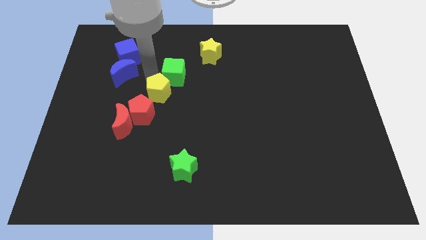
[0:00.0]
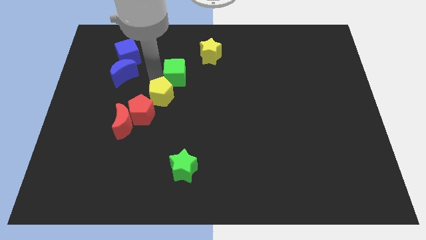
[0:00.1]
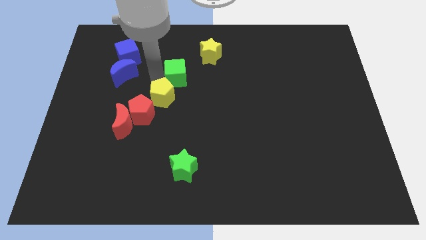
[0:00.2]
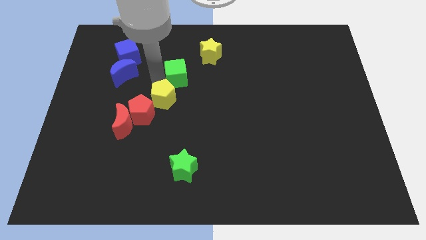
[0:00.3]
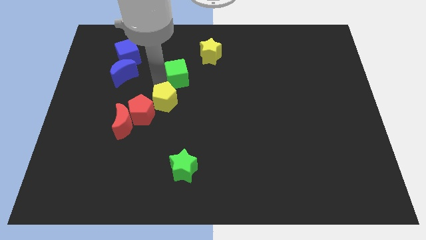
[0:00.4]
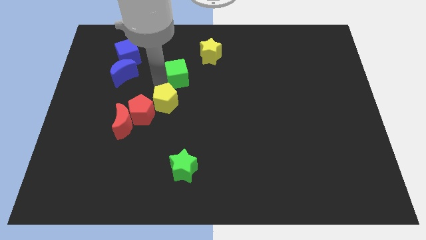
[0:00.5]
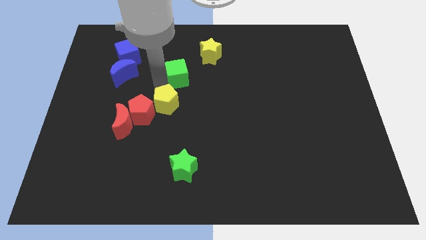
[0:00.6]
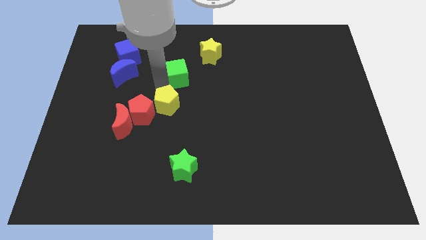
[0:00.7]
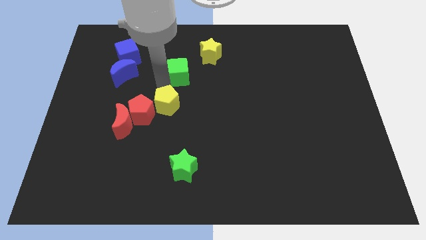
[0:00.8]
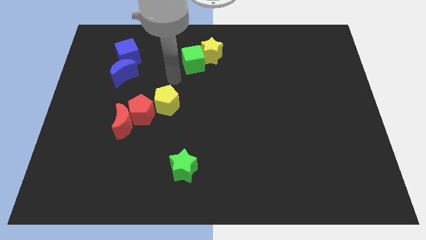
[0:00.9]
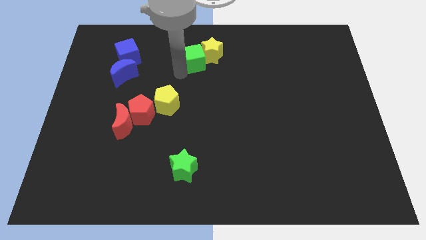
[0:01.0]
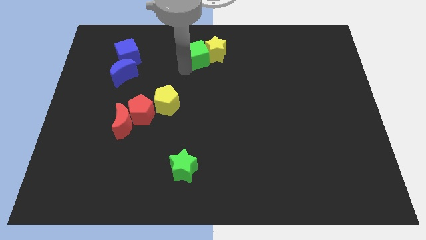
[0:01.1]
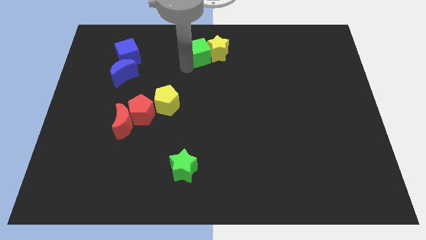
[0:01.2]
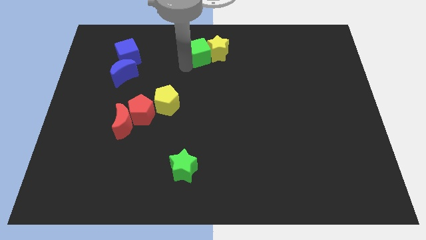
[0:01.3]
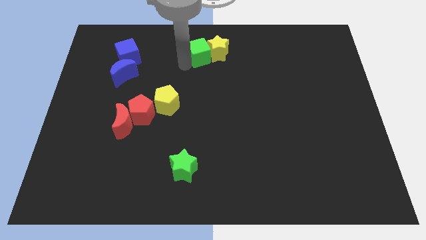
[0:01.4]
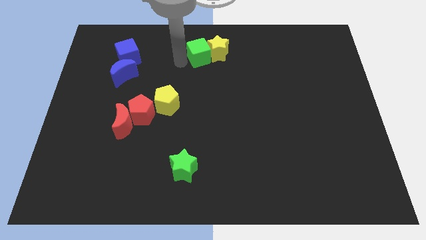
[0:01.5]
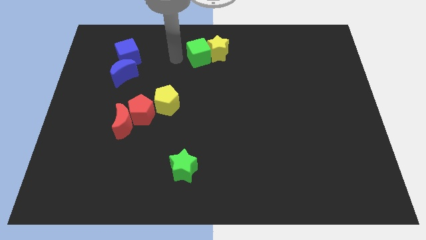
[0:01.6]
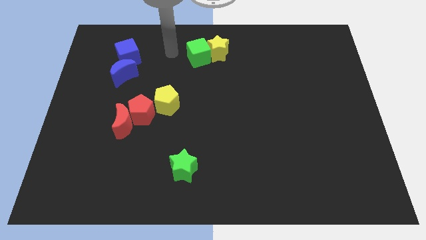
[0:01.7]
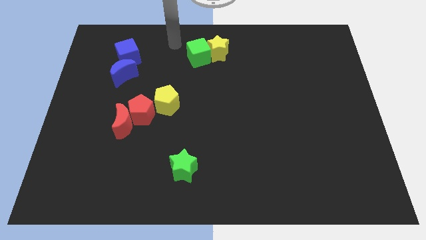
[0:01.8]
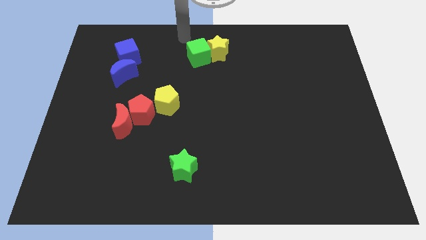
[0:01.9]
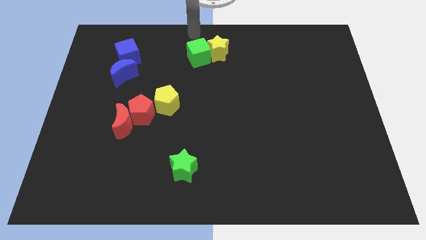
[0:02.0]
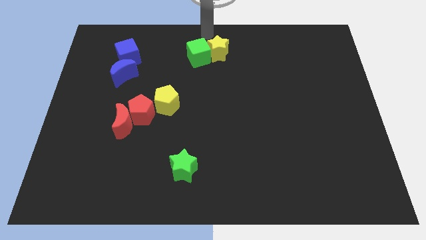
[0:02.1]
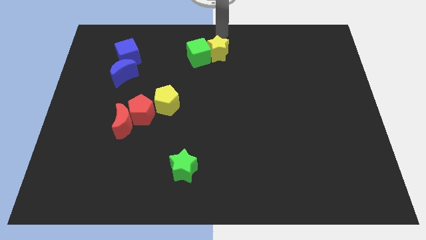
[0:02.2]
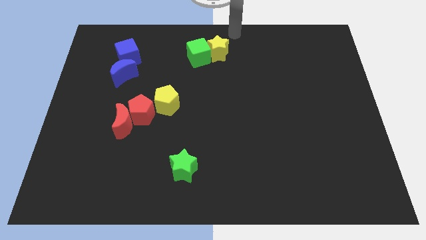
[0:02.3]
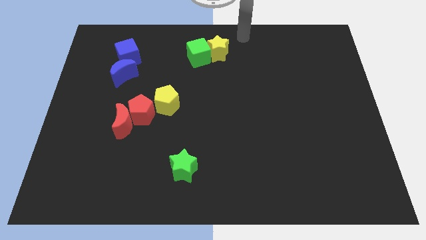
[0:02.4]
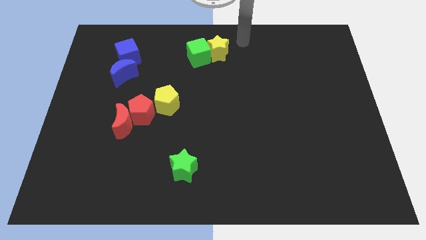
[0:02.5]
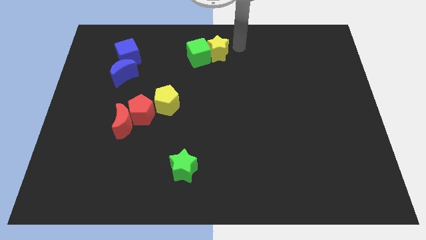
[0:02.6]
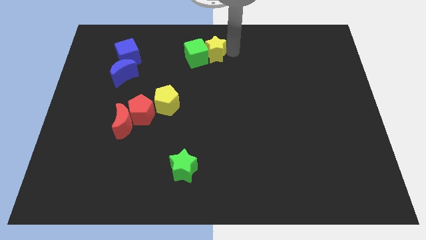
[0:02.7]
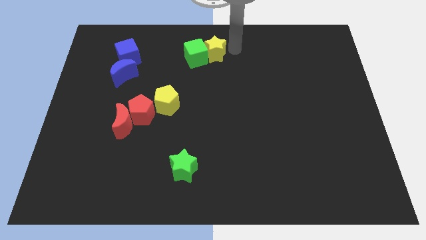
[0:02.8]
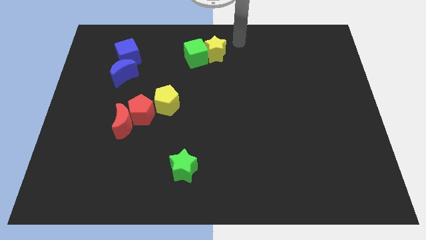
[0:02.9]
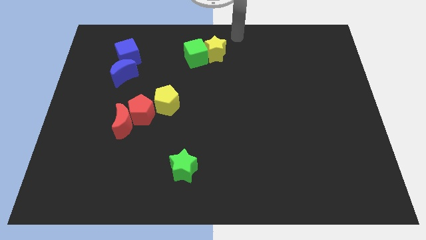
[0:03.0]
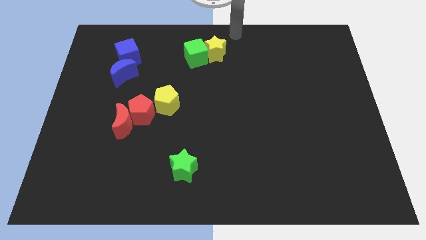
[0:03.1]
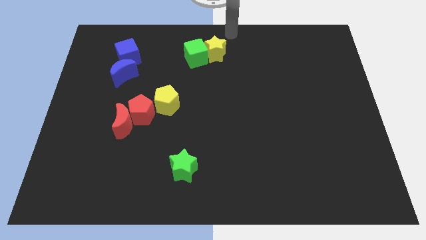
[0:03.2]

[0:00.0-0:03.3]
place the green cube and yellow star together at the top center of the board

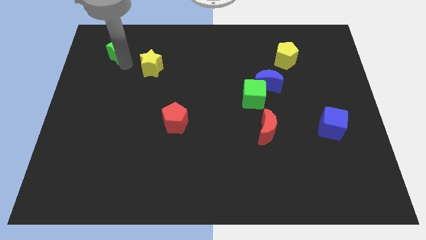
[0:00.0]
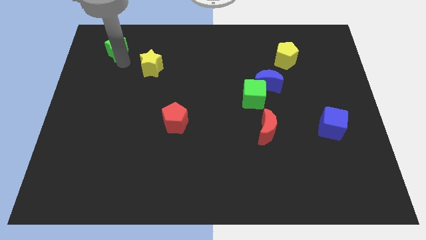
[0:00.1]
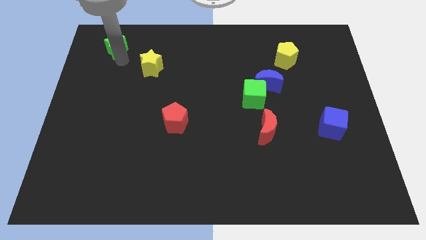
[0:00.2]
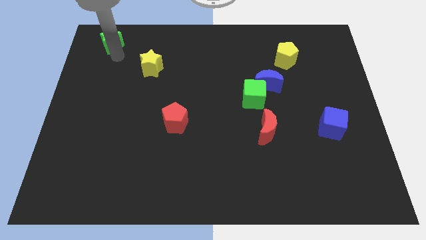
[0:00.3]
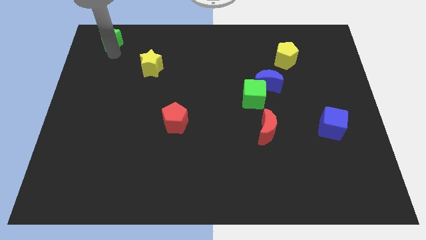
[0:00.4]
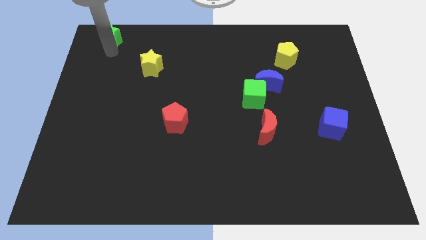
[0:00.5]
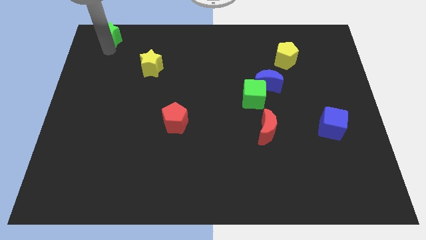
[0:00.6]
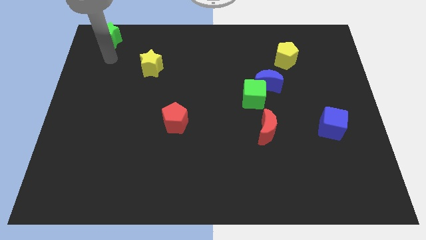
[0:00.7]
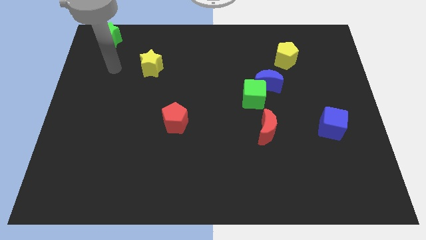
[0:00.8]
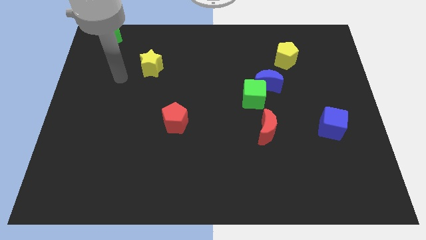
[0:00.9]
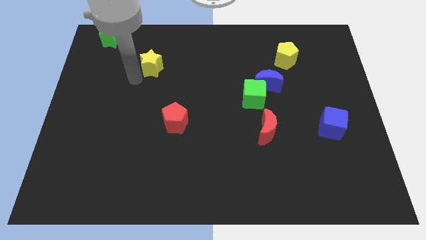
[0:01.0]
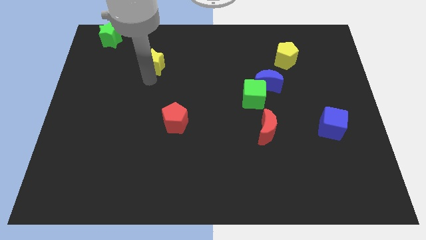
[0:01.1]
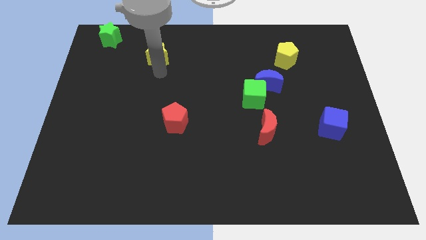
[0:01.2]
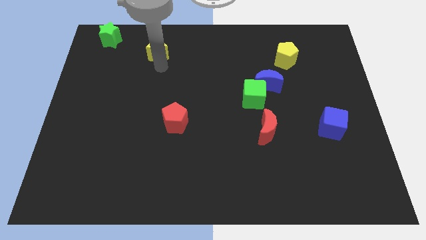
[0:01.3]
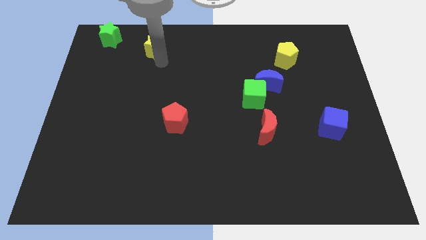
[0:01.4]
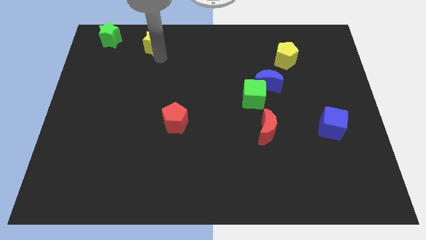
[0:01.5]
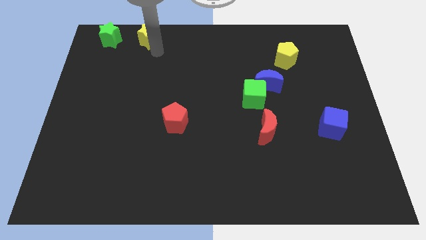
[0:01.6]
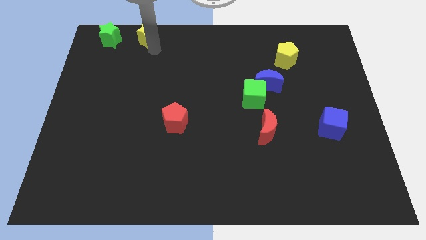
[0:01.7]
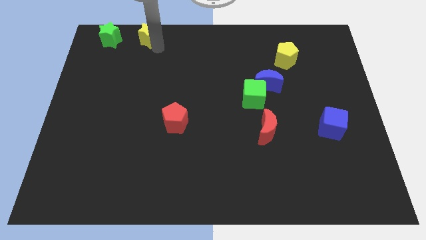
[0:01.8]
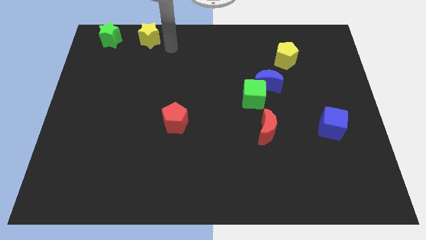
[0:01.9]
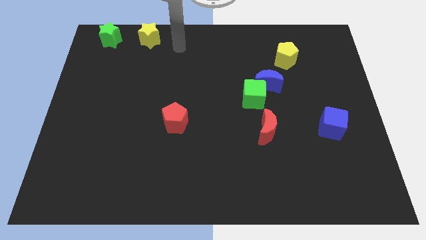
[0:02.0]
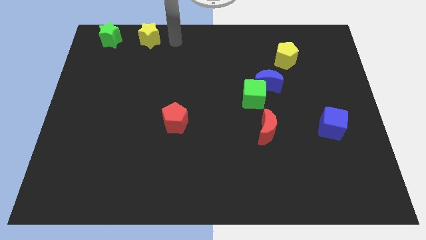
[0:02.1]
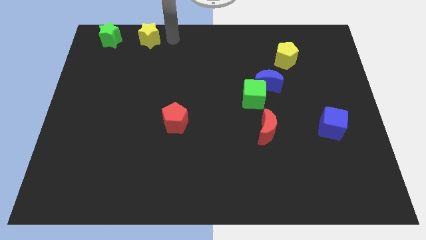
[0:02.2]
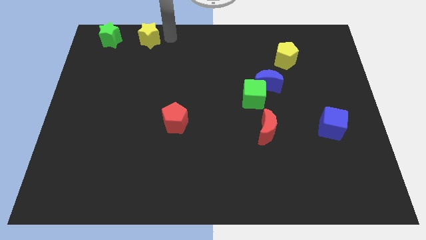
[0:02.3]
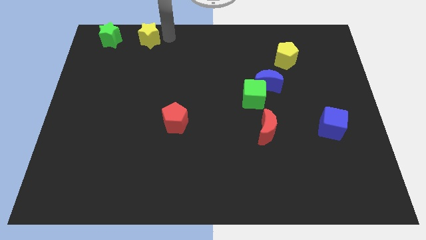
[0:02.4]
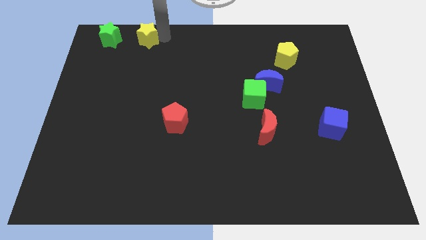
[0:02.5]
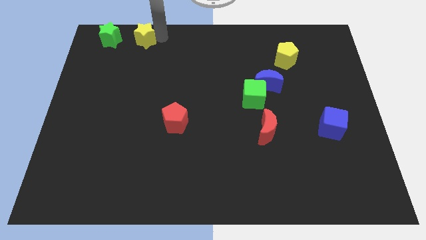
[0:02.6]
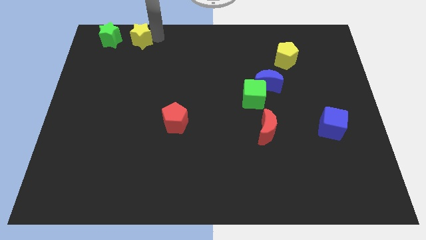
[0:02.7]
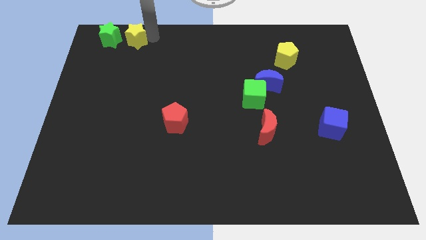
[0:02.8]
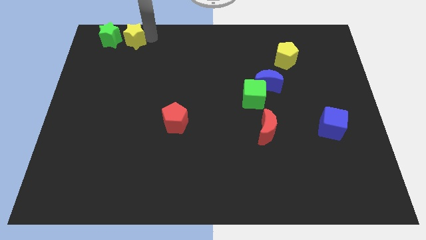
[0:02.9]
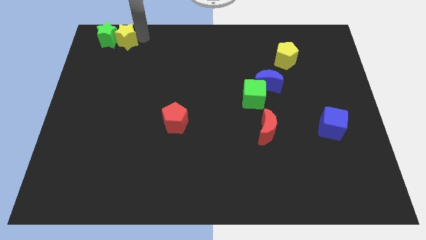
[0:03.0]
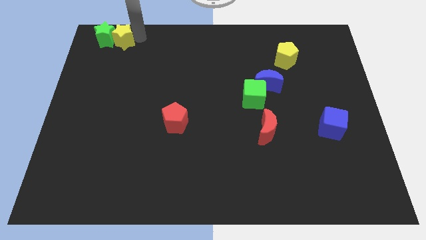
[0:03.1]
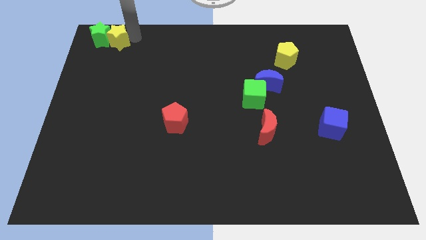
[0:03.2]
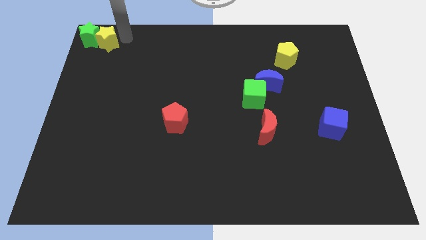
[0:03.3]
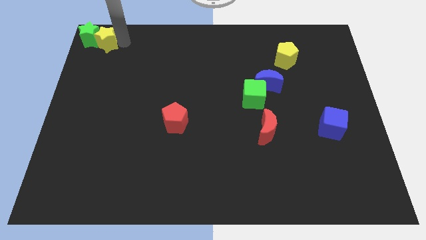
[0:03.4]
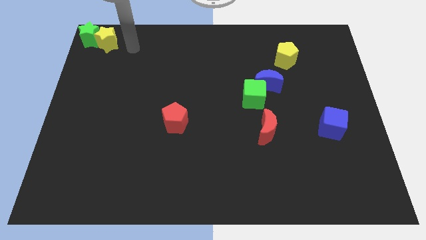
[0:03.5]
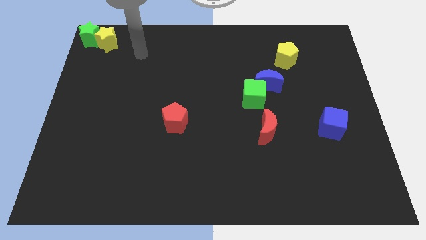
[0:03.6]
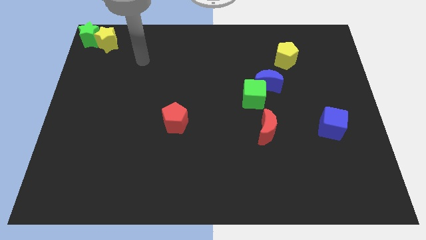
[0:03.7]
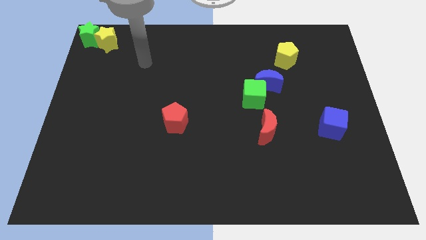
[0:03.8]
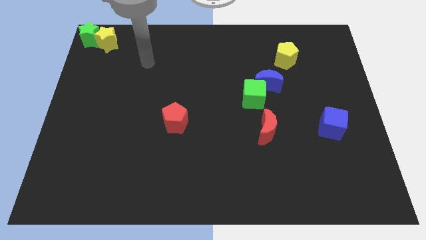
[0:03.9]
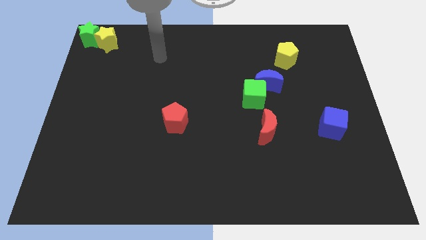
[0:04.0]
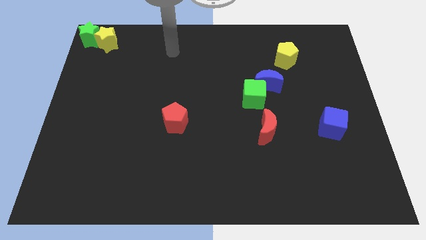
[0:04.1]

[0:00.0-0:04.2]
move green and yellow star at top left

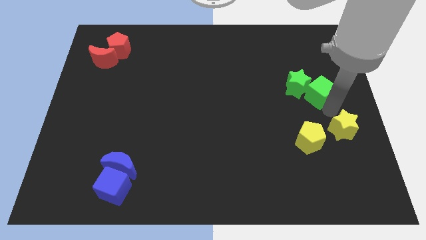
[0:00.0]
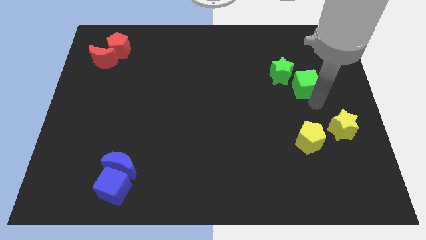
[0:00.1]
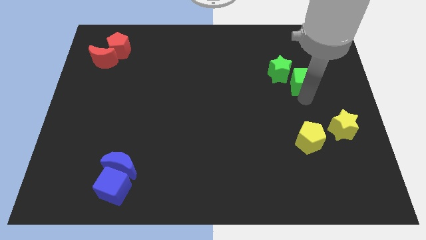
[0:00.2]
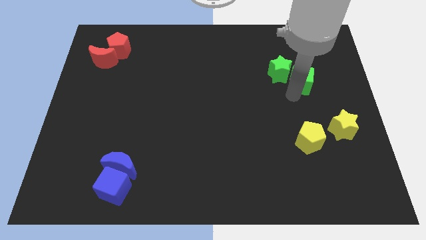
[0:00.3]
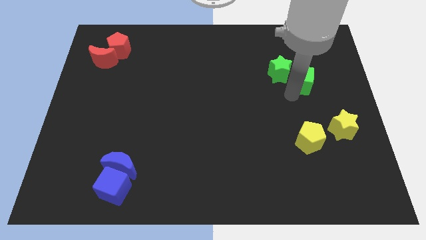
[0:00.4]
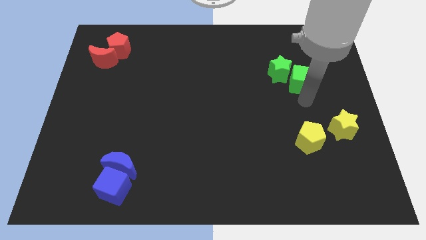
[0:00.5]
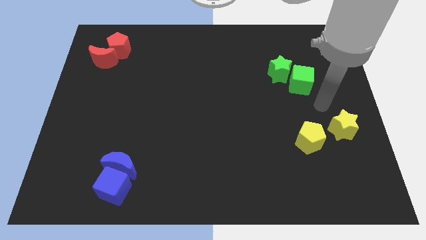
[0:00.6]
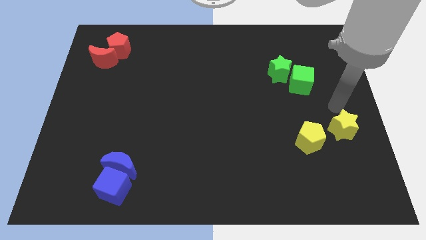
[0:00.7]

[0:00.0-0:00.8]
slightly push the green blocks towards top side

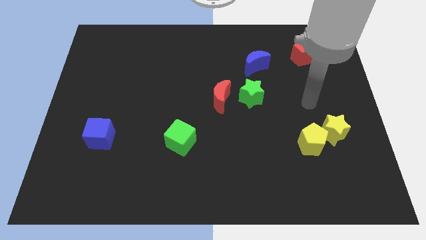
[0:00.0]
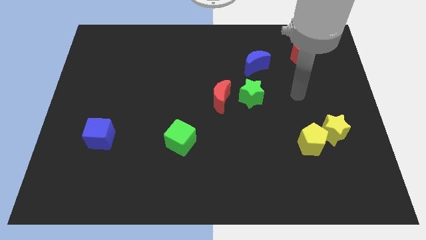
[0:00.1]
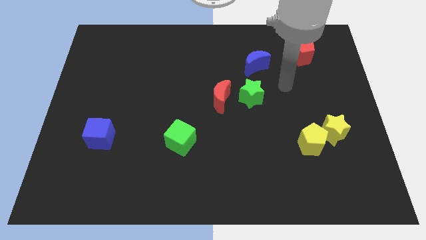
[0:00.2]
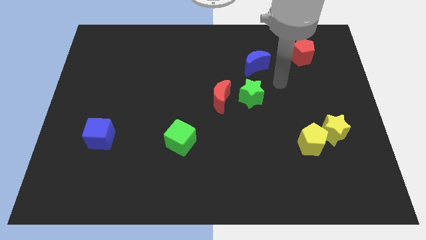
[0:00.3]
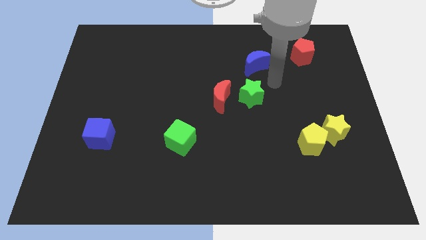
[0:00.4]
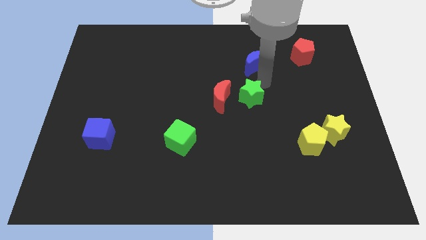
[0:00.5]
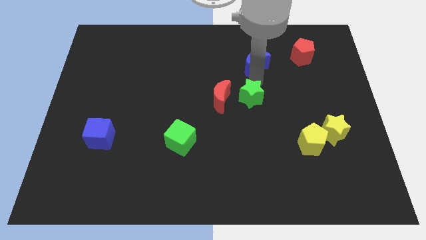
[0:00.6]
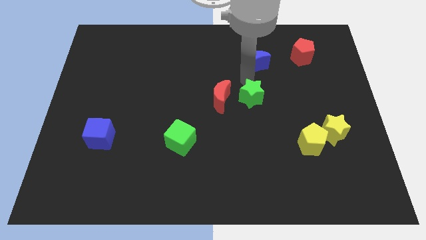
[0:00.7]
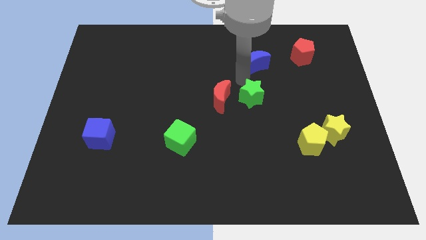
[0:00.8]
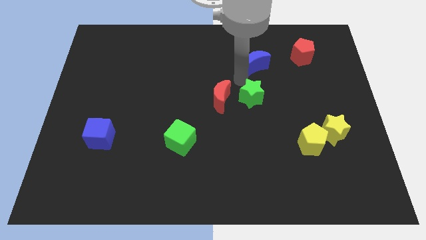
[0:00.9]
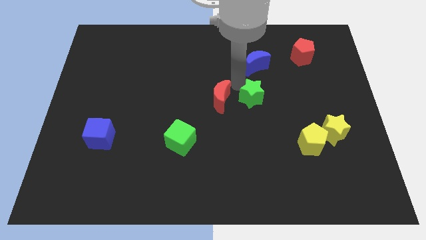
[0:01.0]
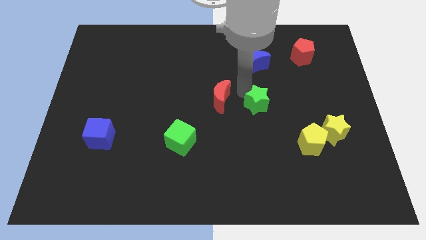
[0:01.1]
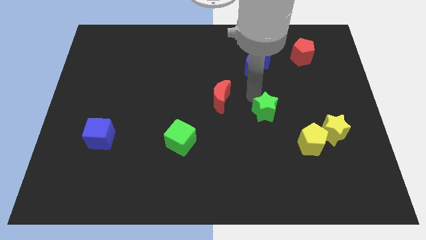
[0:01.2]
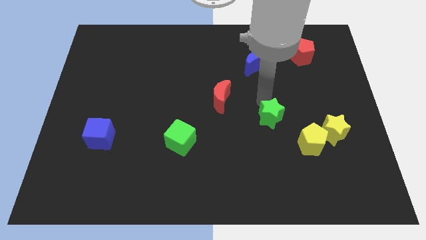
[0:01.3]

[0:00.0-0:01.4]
move the green star away from the right side of the red crescent
